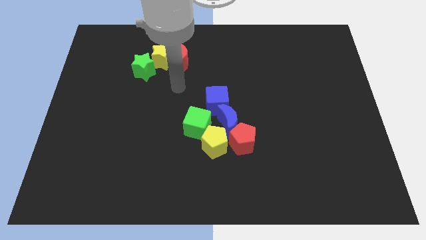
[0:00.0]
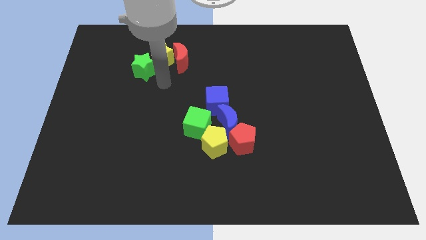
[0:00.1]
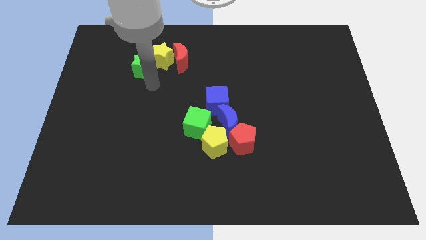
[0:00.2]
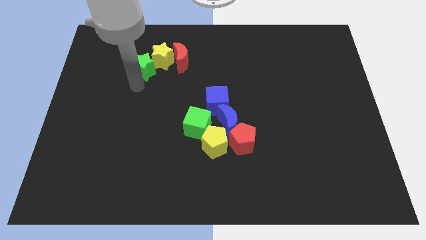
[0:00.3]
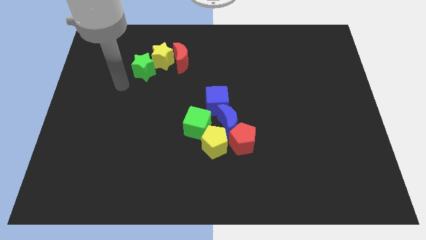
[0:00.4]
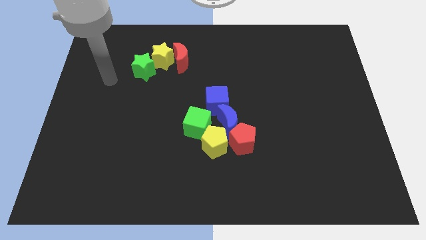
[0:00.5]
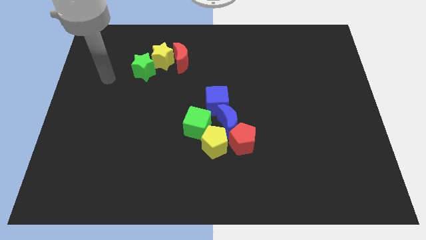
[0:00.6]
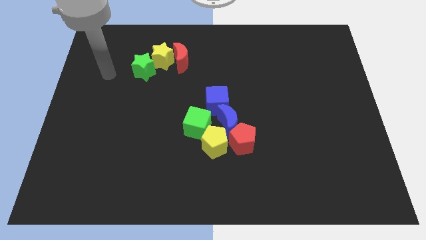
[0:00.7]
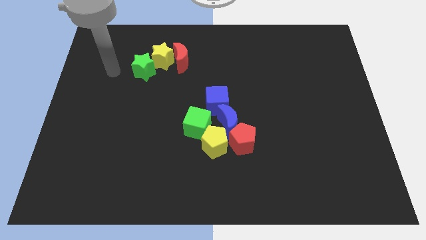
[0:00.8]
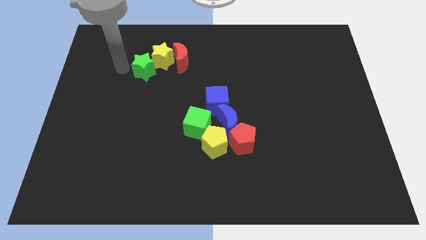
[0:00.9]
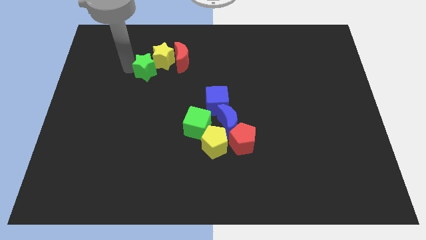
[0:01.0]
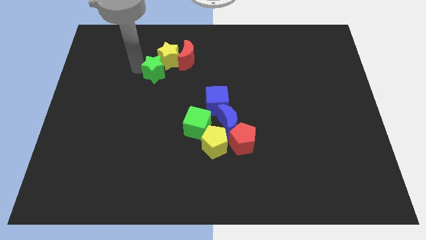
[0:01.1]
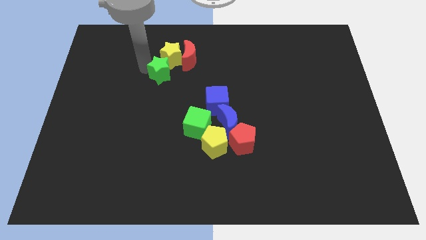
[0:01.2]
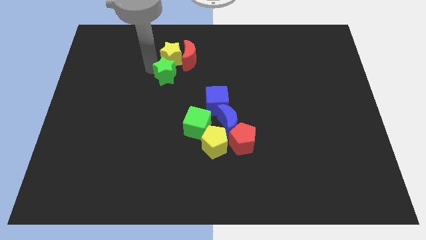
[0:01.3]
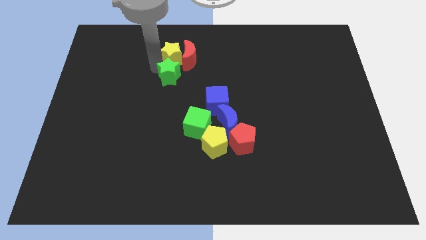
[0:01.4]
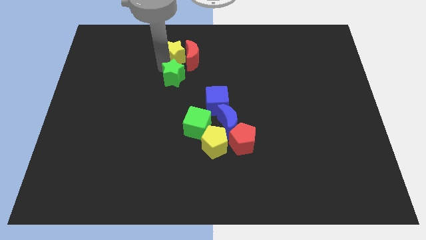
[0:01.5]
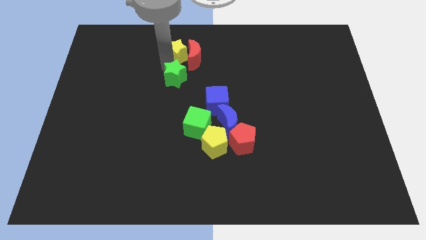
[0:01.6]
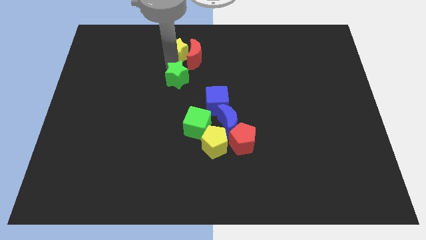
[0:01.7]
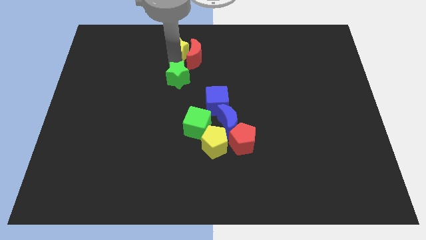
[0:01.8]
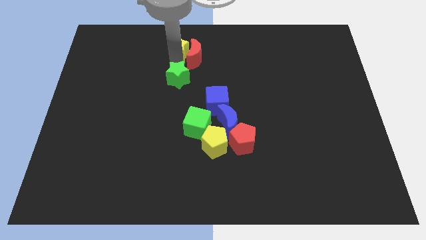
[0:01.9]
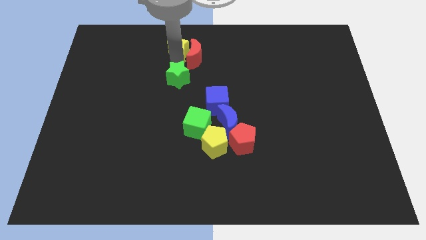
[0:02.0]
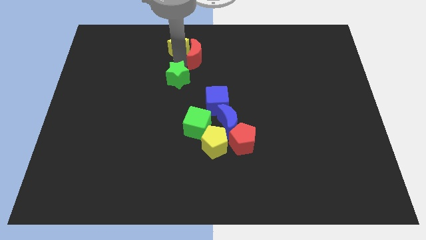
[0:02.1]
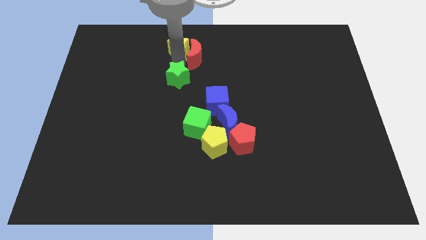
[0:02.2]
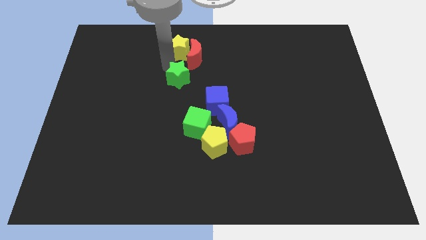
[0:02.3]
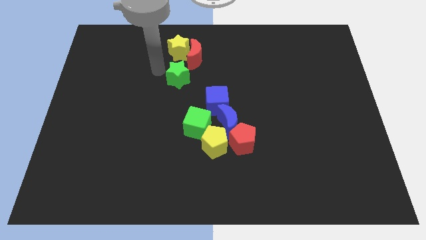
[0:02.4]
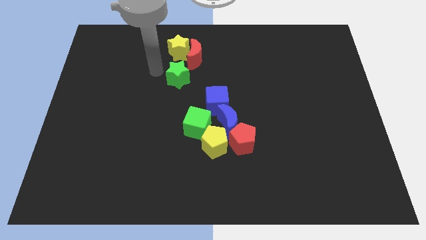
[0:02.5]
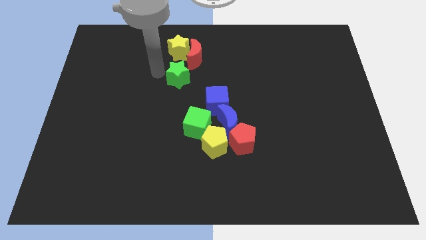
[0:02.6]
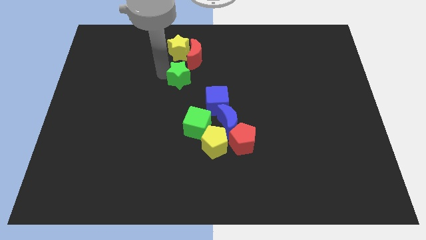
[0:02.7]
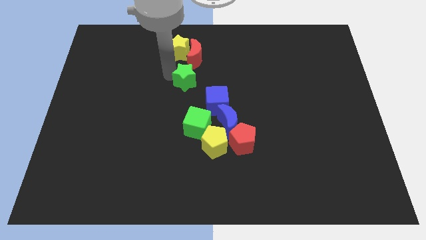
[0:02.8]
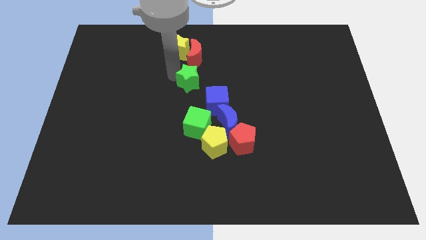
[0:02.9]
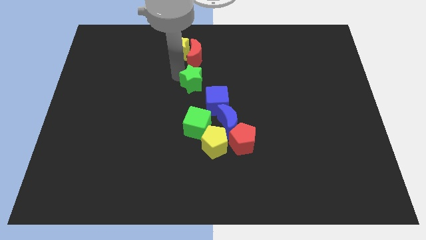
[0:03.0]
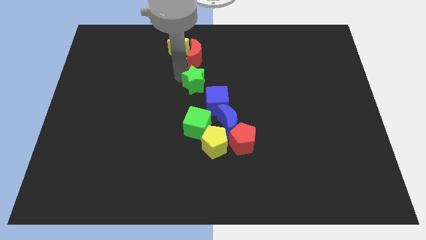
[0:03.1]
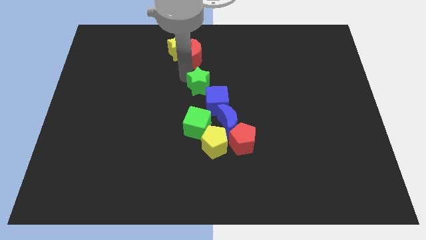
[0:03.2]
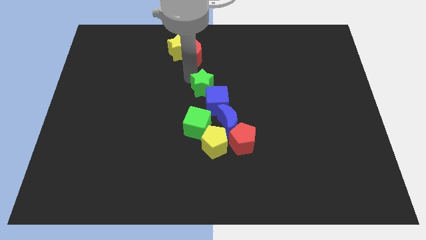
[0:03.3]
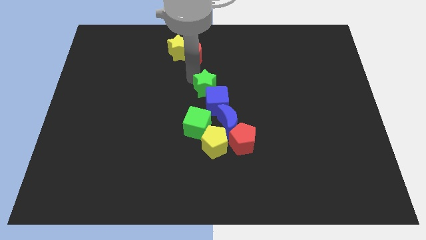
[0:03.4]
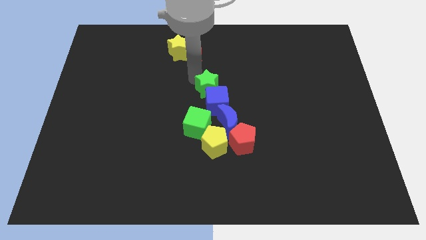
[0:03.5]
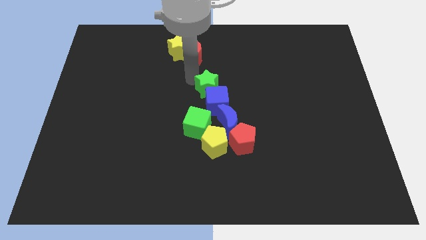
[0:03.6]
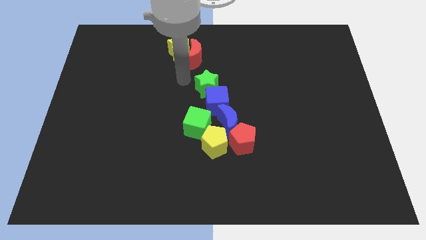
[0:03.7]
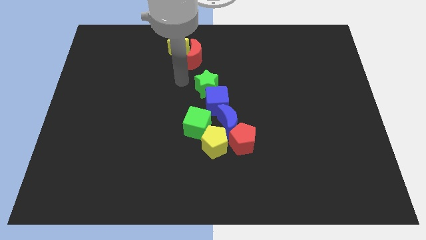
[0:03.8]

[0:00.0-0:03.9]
move the green star above the blue cube

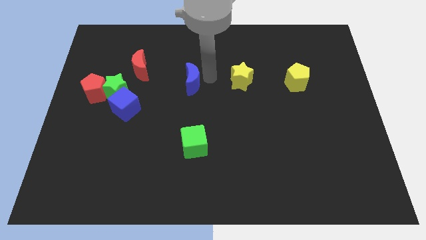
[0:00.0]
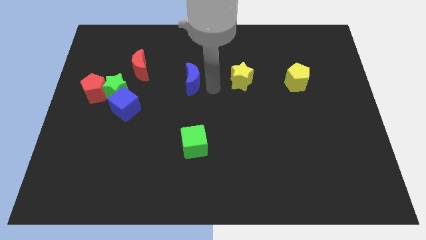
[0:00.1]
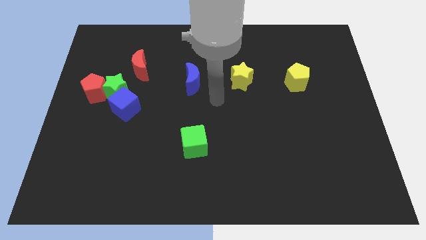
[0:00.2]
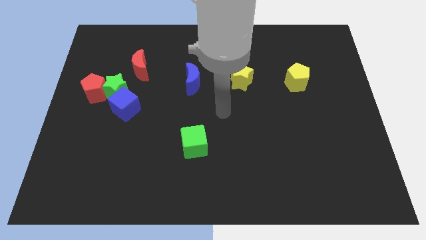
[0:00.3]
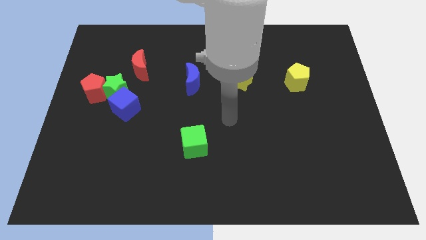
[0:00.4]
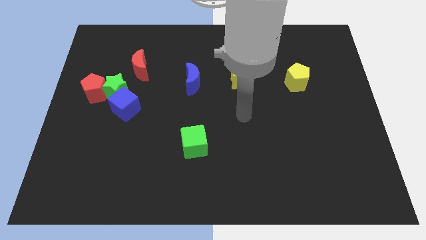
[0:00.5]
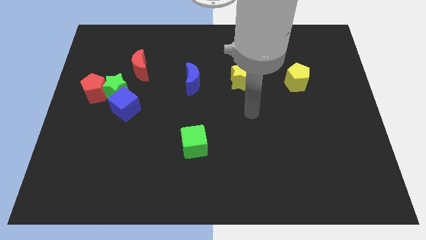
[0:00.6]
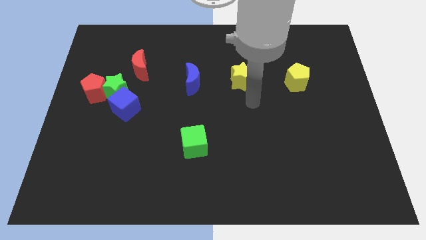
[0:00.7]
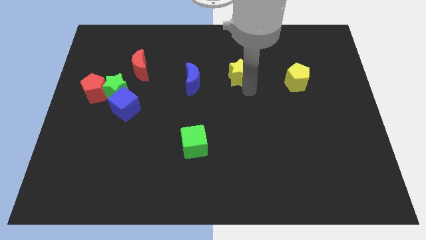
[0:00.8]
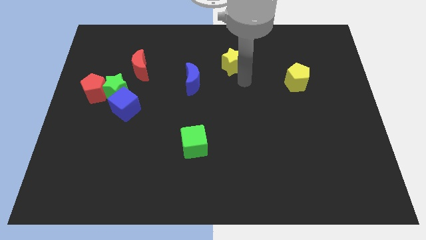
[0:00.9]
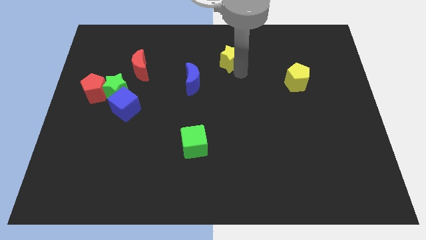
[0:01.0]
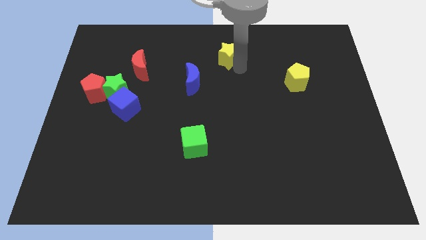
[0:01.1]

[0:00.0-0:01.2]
push yellow star slightly towards up

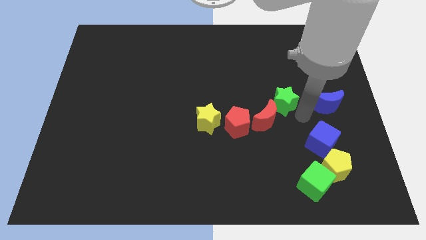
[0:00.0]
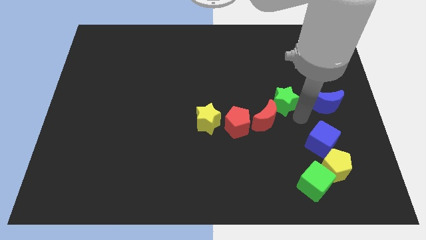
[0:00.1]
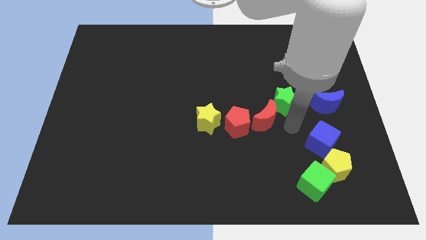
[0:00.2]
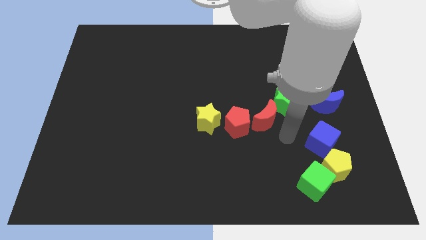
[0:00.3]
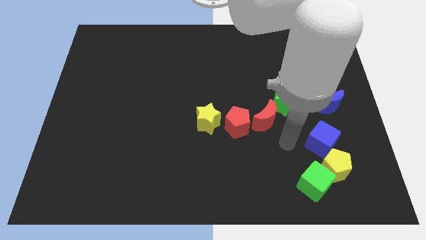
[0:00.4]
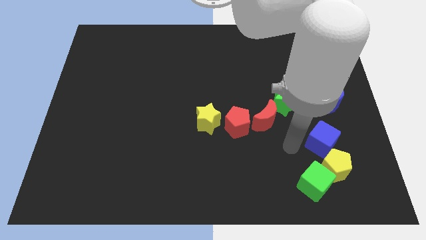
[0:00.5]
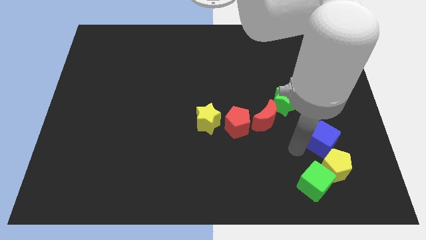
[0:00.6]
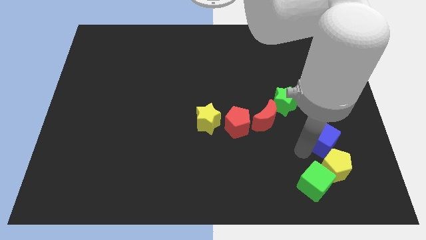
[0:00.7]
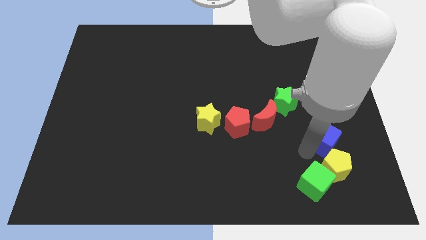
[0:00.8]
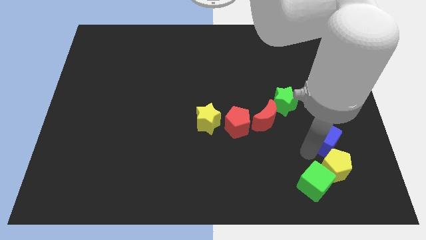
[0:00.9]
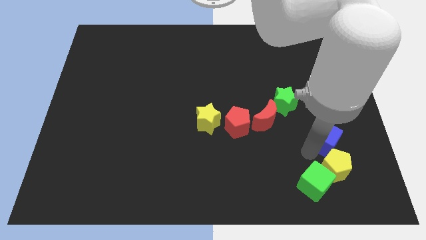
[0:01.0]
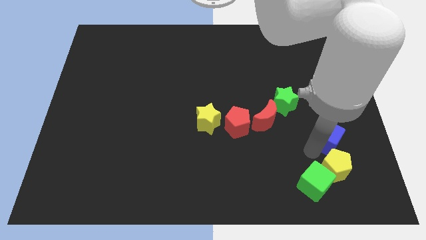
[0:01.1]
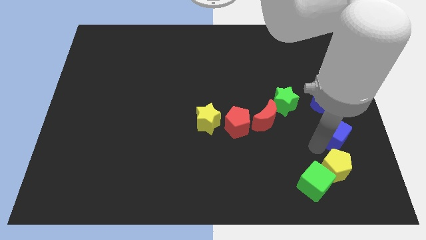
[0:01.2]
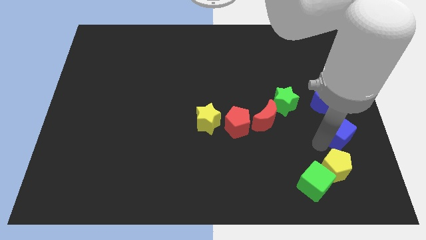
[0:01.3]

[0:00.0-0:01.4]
put the blue cube below the blue moon

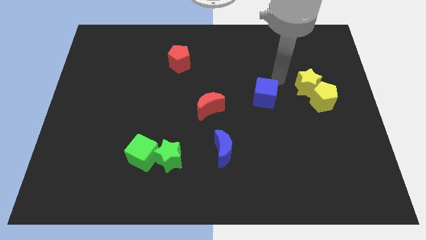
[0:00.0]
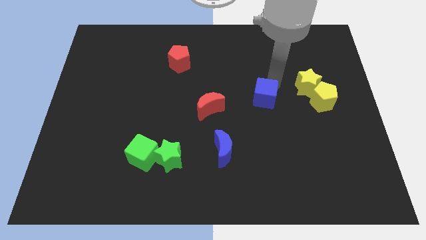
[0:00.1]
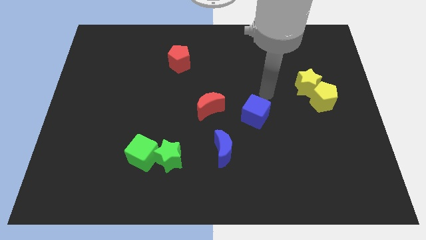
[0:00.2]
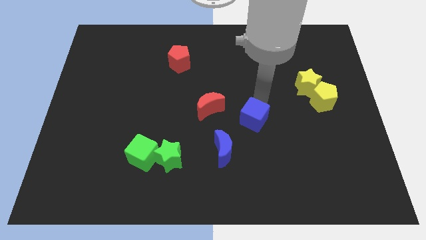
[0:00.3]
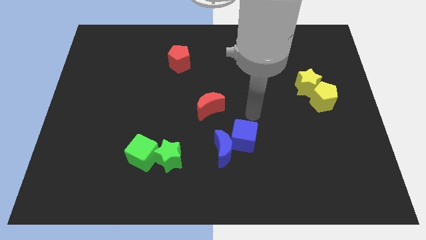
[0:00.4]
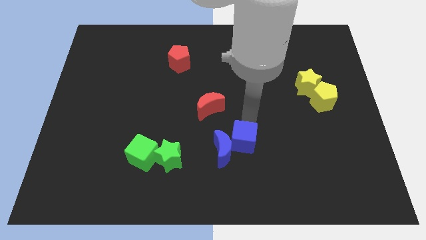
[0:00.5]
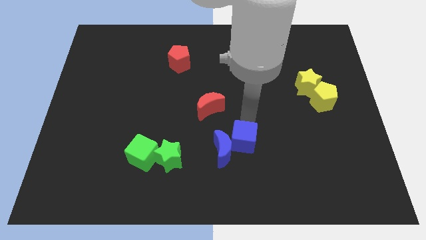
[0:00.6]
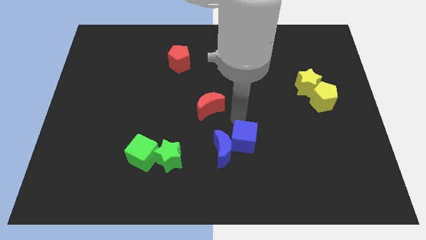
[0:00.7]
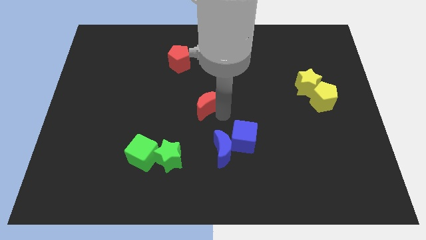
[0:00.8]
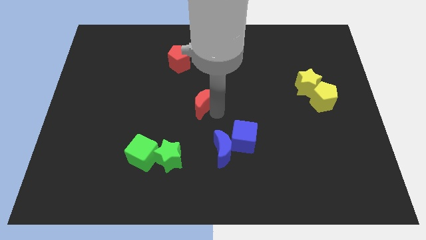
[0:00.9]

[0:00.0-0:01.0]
point your arm close to red moon

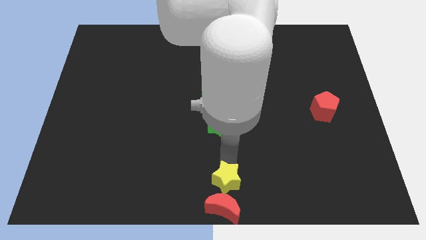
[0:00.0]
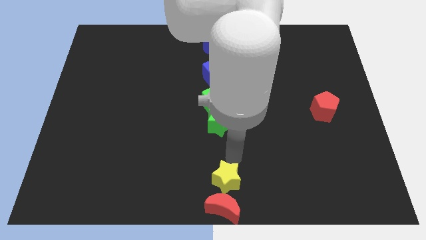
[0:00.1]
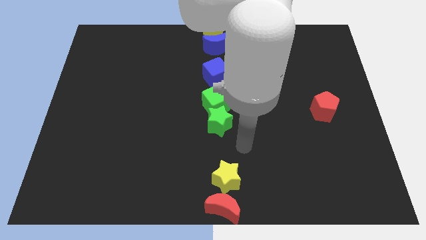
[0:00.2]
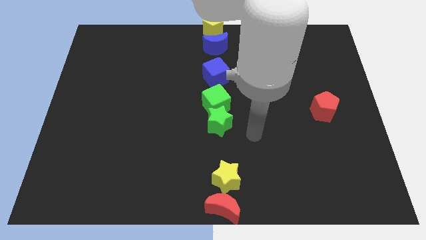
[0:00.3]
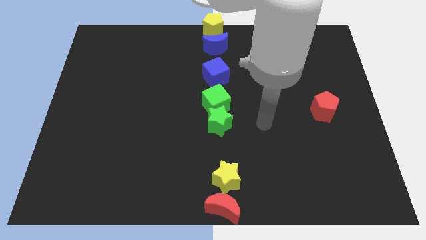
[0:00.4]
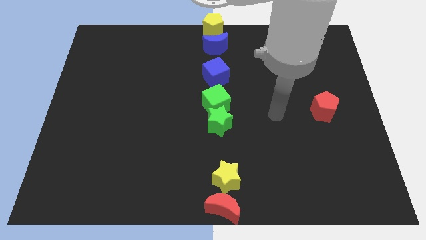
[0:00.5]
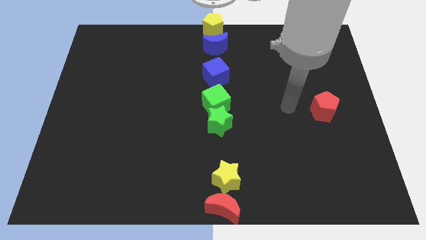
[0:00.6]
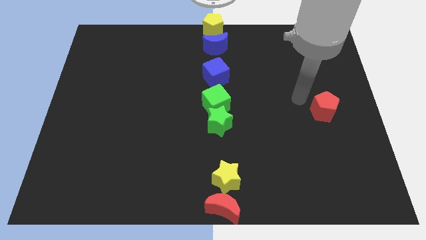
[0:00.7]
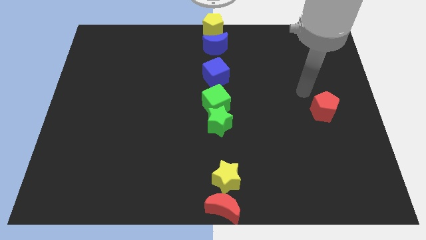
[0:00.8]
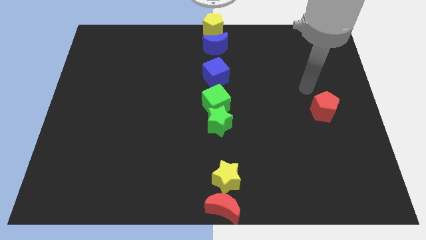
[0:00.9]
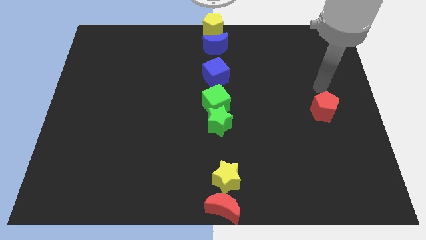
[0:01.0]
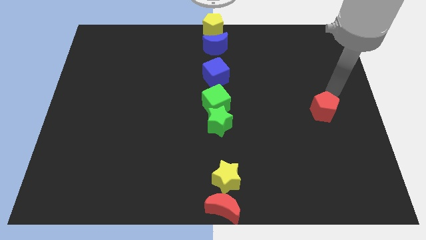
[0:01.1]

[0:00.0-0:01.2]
move your arm on top of the red pentagon

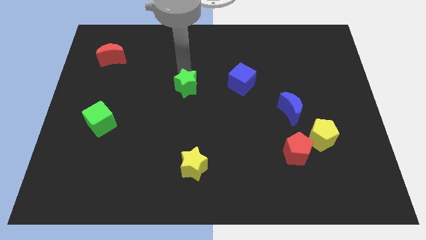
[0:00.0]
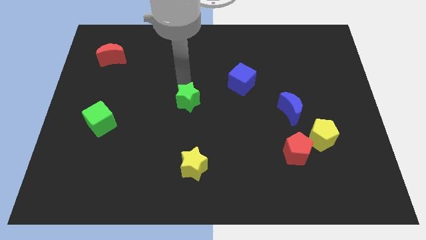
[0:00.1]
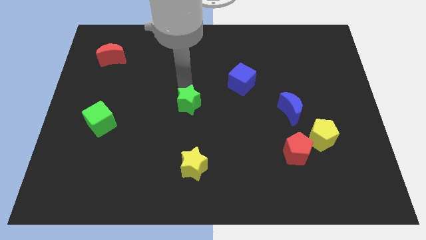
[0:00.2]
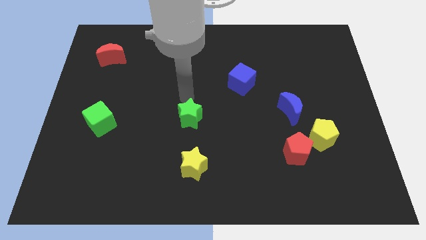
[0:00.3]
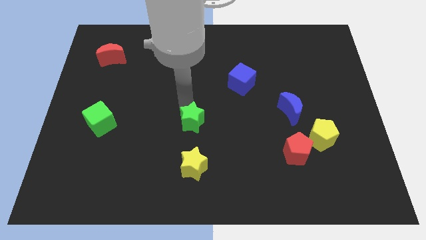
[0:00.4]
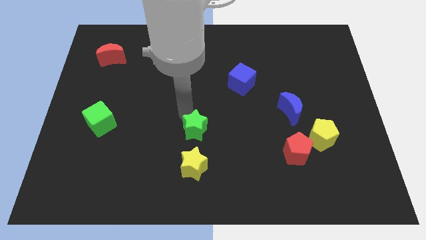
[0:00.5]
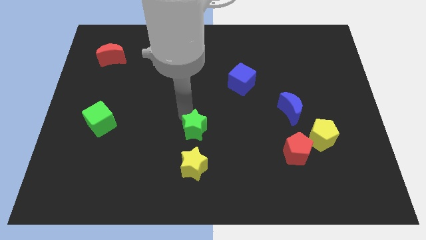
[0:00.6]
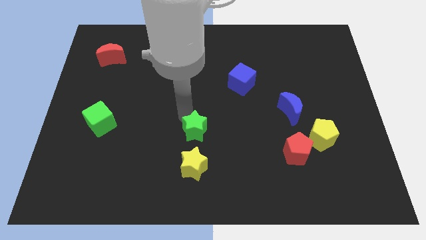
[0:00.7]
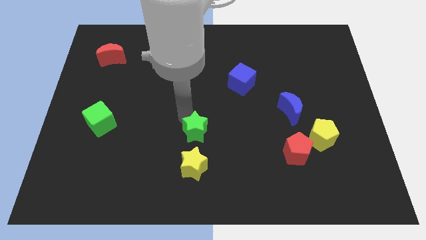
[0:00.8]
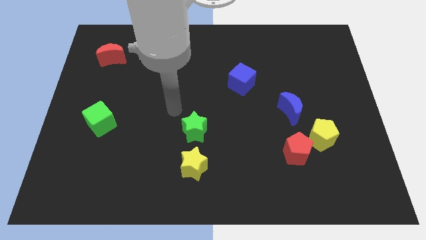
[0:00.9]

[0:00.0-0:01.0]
place green star to the top of yellow star
